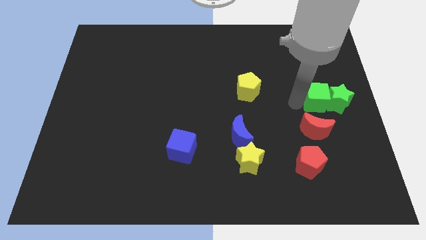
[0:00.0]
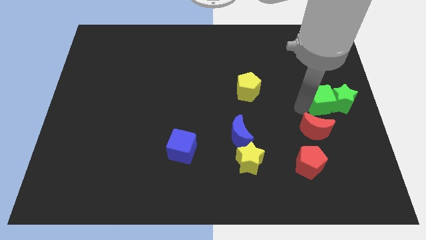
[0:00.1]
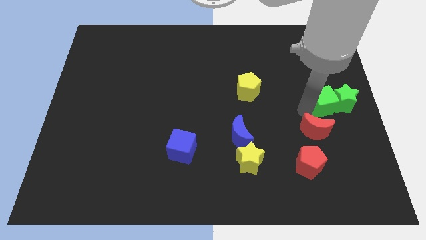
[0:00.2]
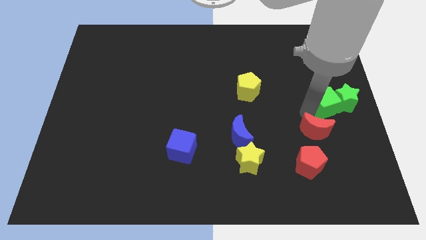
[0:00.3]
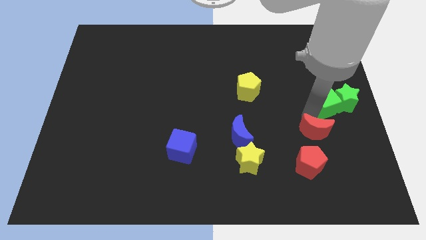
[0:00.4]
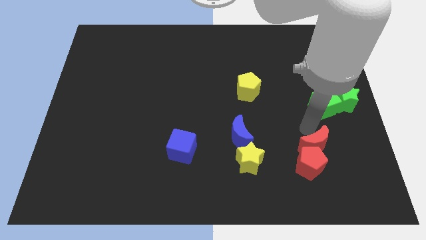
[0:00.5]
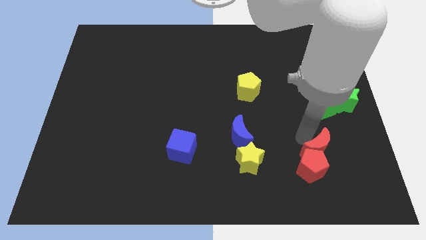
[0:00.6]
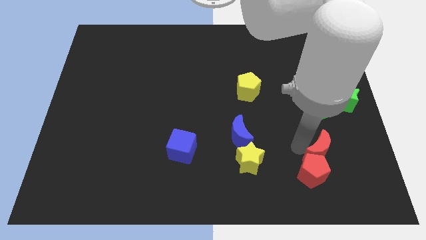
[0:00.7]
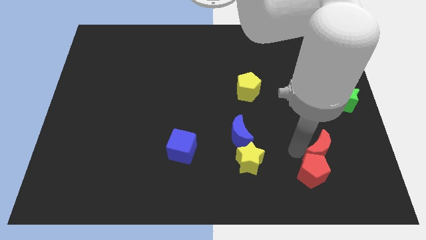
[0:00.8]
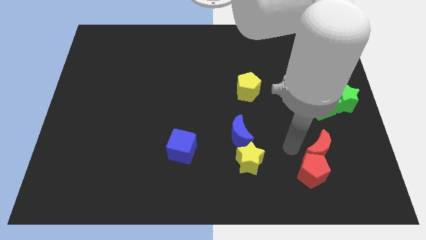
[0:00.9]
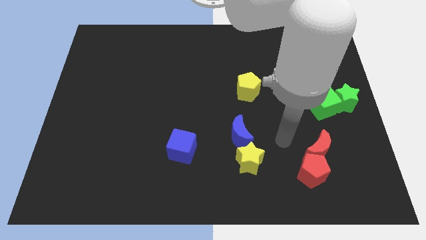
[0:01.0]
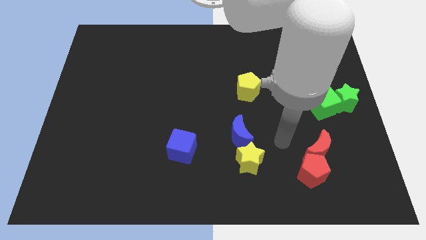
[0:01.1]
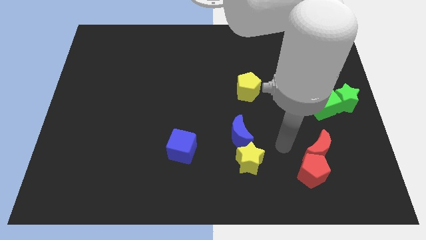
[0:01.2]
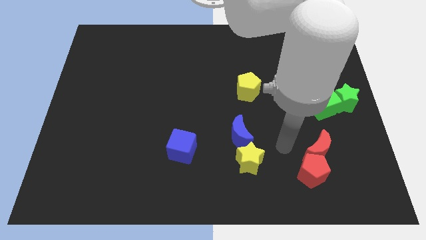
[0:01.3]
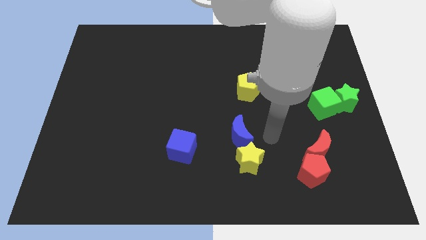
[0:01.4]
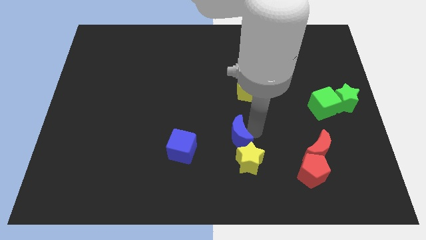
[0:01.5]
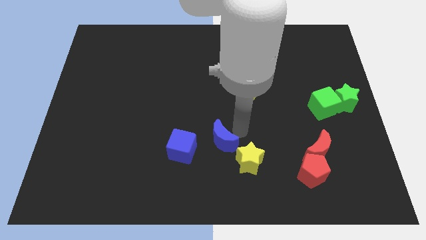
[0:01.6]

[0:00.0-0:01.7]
slide the blue moon towards the blue cube

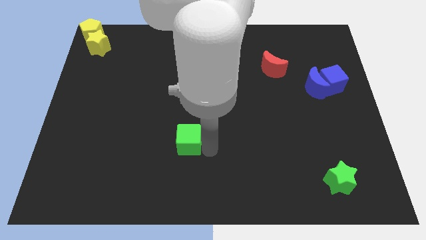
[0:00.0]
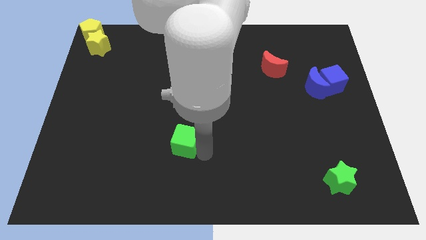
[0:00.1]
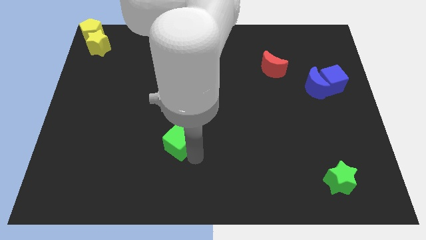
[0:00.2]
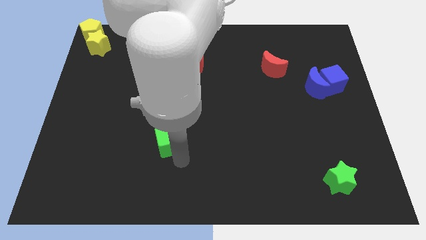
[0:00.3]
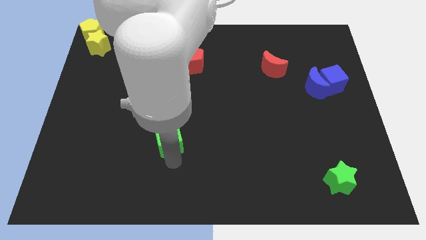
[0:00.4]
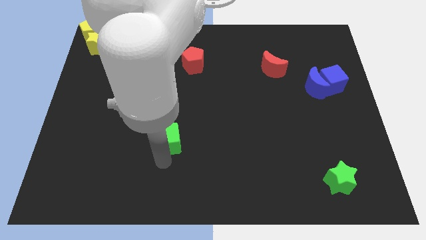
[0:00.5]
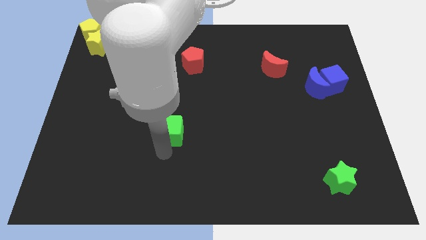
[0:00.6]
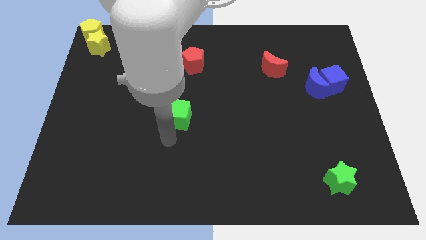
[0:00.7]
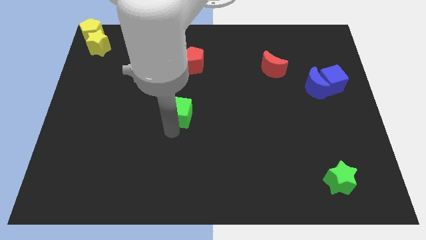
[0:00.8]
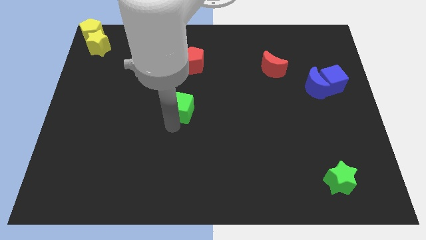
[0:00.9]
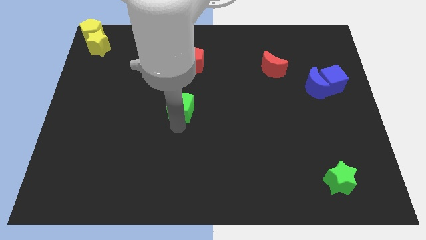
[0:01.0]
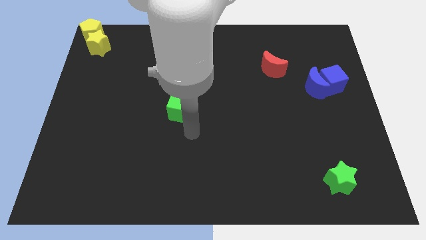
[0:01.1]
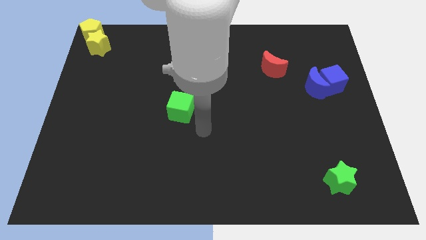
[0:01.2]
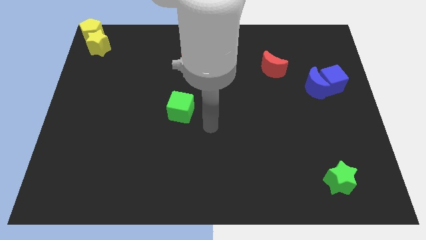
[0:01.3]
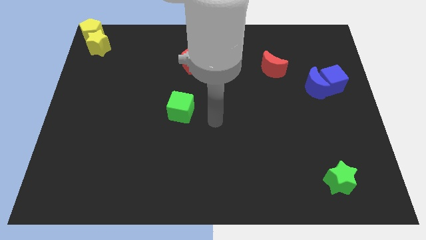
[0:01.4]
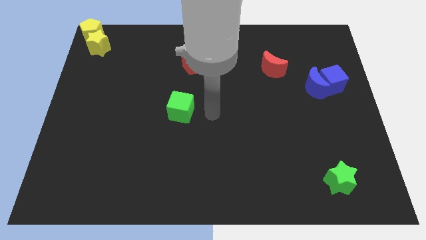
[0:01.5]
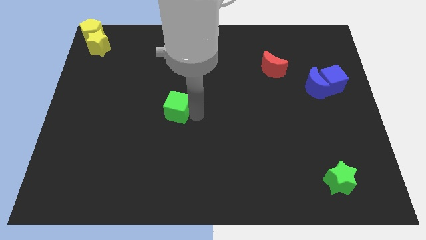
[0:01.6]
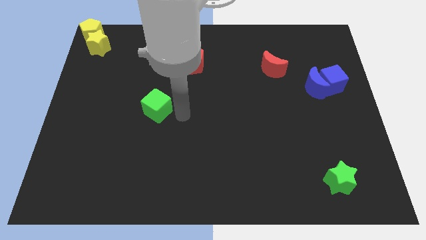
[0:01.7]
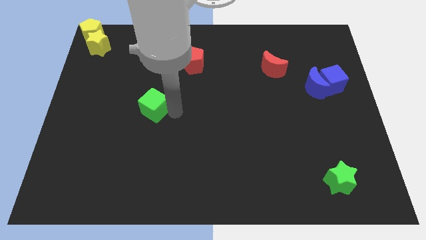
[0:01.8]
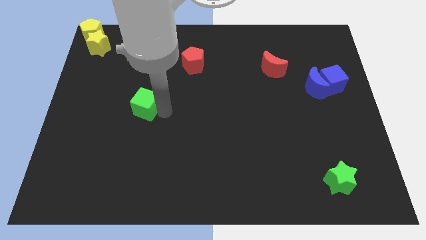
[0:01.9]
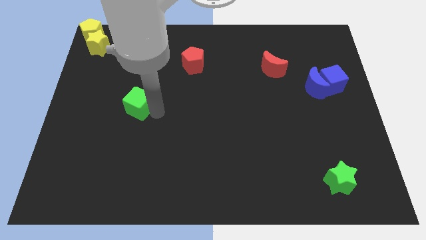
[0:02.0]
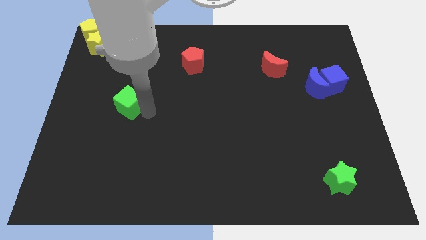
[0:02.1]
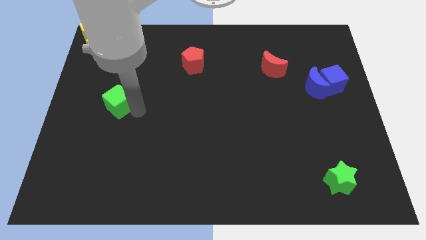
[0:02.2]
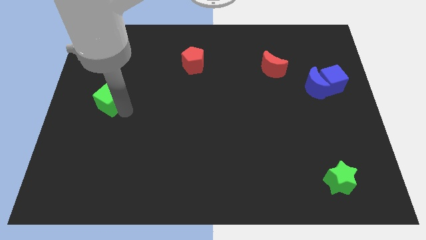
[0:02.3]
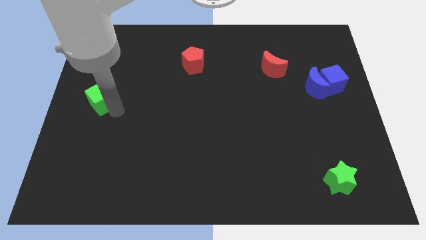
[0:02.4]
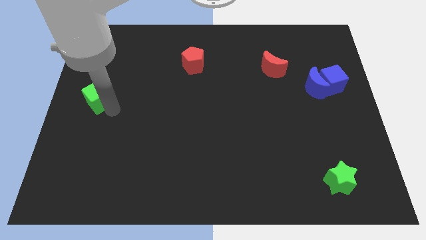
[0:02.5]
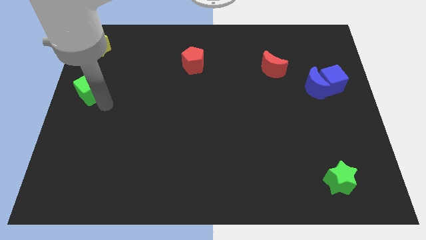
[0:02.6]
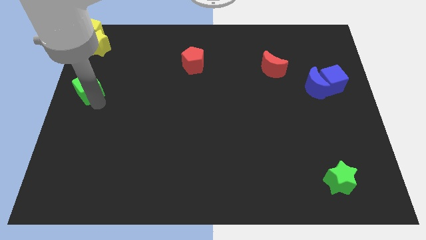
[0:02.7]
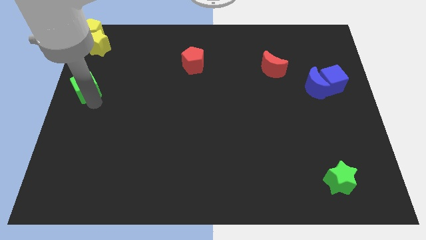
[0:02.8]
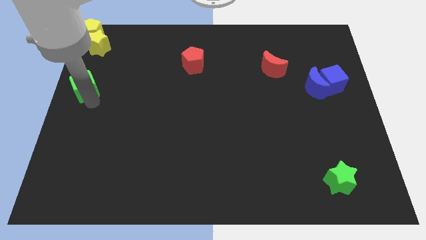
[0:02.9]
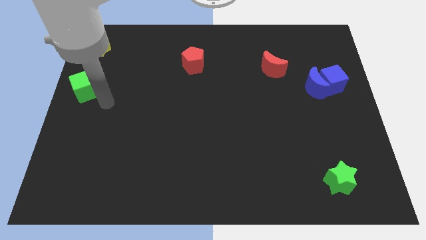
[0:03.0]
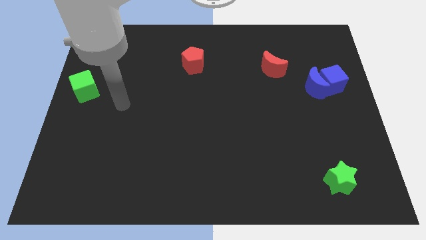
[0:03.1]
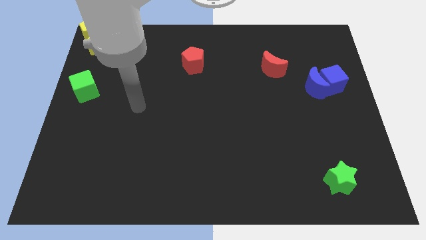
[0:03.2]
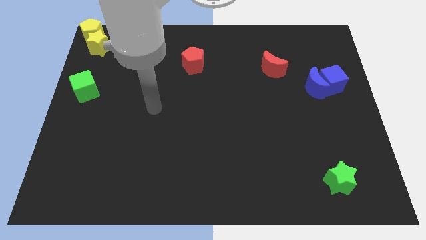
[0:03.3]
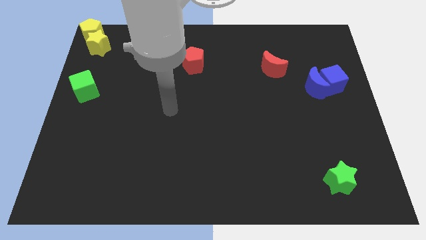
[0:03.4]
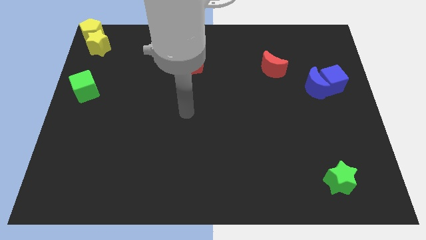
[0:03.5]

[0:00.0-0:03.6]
move the green cube to the bottom of the yellow star

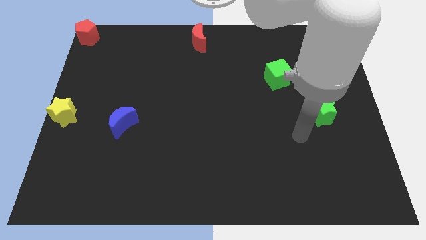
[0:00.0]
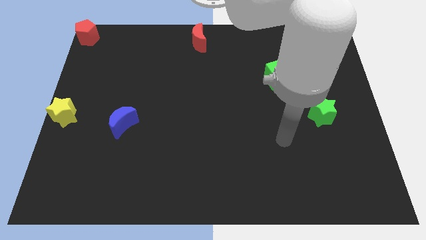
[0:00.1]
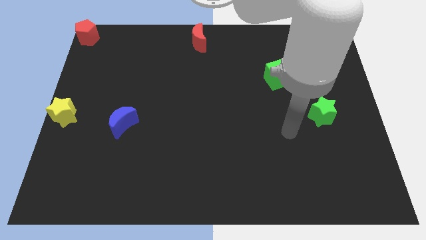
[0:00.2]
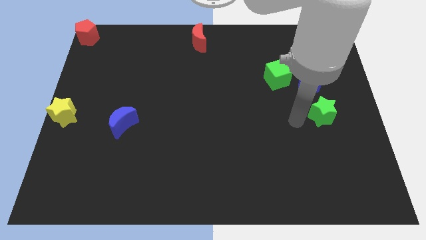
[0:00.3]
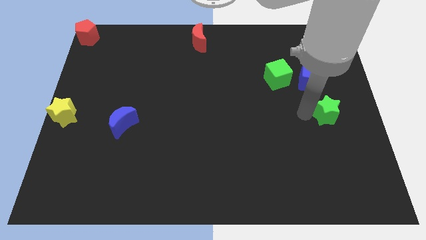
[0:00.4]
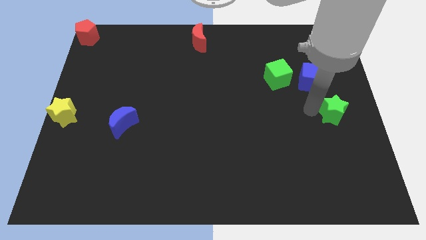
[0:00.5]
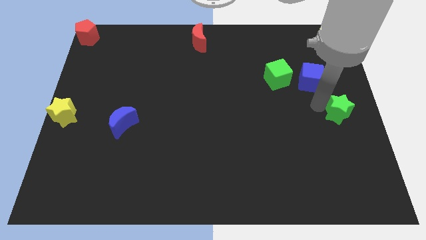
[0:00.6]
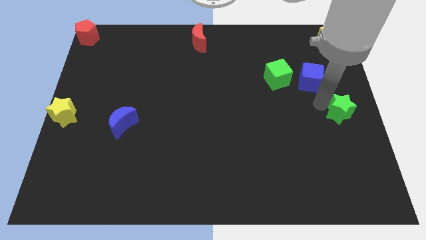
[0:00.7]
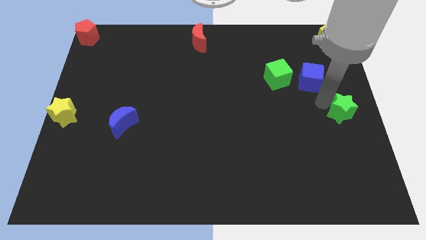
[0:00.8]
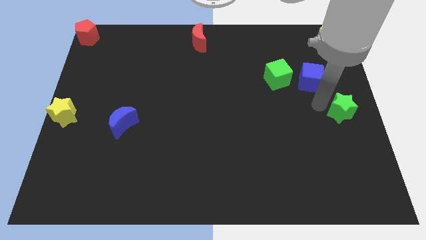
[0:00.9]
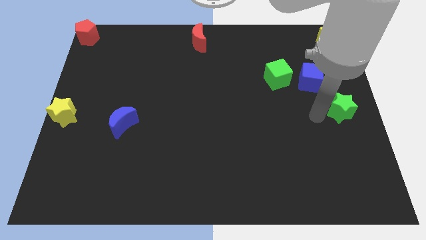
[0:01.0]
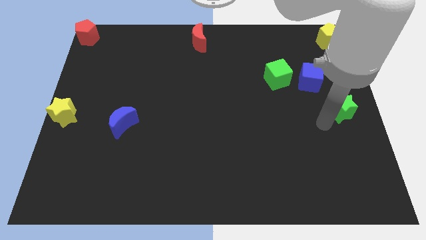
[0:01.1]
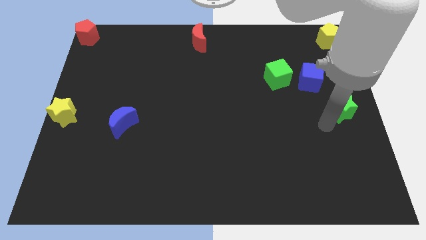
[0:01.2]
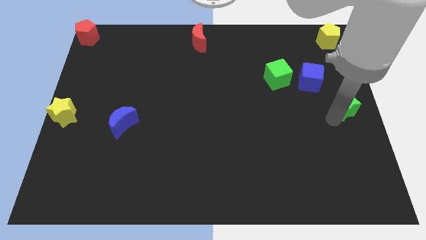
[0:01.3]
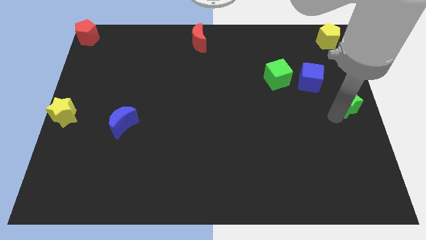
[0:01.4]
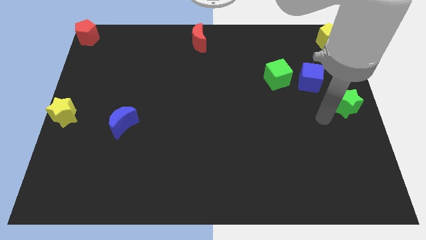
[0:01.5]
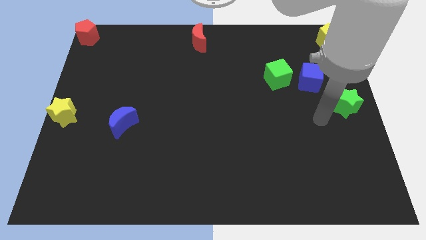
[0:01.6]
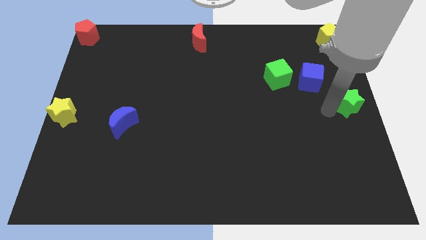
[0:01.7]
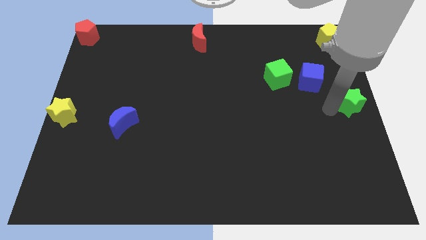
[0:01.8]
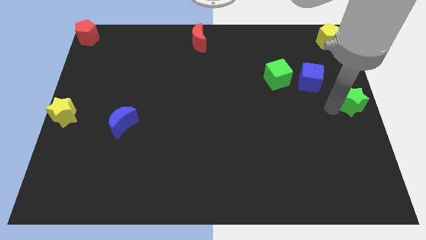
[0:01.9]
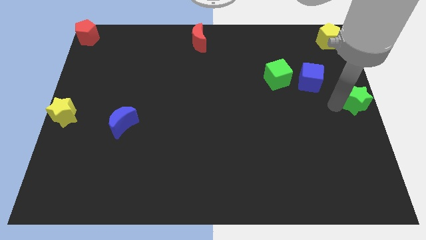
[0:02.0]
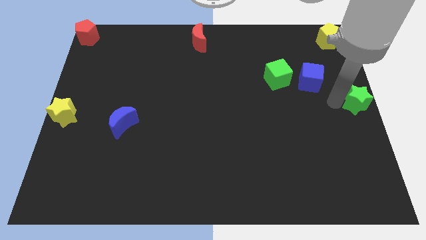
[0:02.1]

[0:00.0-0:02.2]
place the green star at the center right of the board

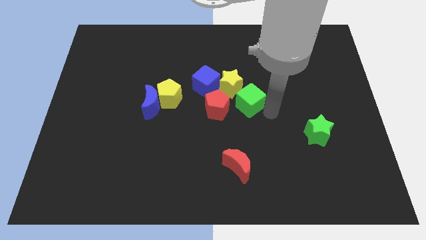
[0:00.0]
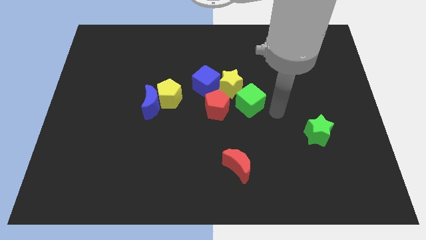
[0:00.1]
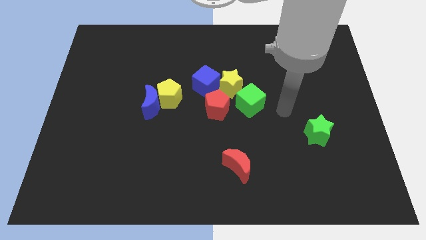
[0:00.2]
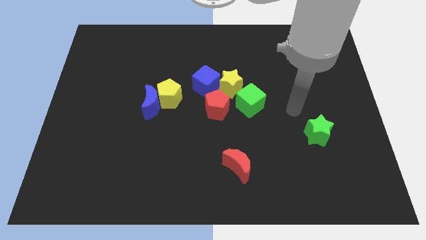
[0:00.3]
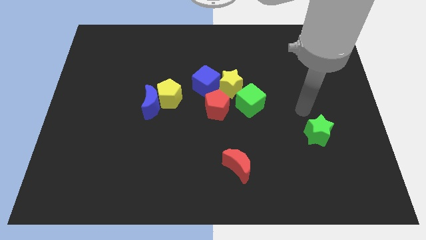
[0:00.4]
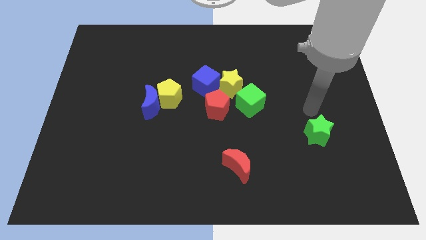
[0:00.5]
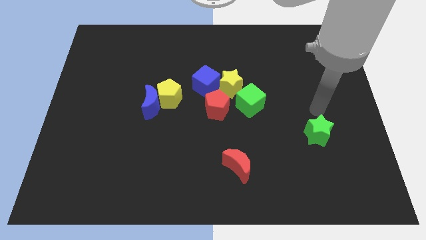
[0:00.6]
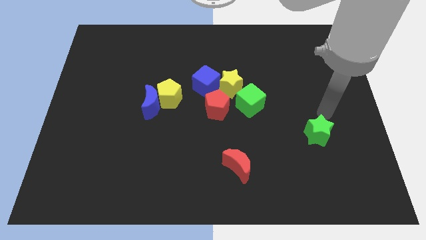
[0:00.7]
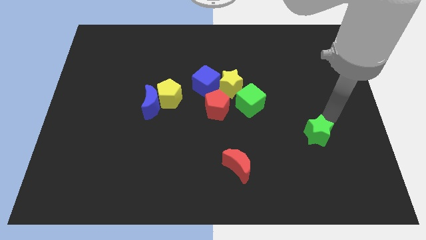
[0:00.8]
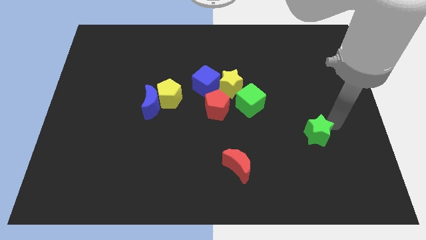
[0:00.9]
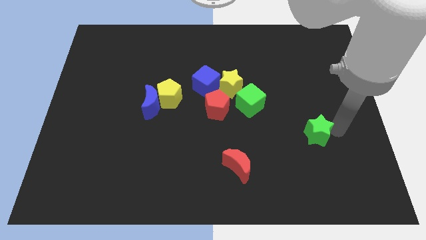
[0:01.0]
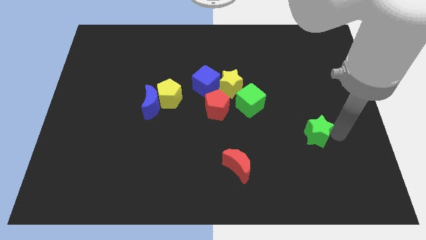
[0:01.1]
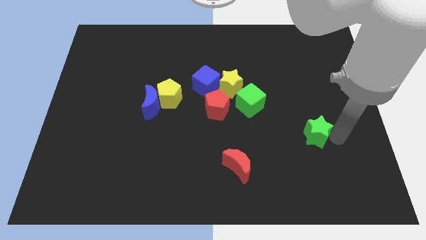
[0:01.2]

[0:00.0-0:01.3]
tab the right side of the green star

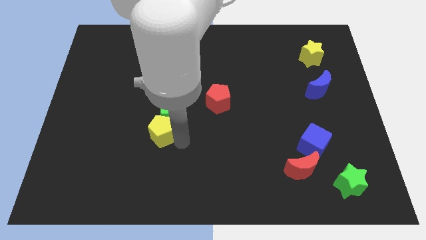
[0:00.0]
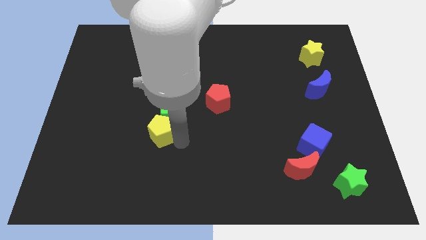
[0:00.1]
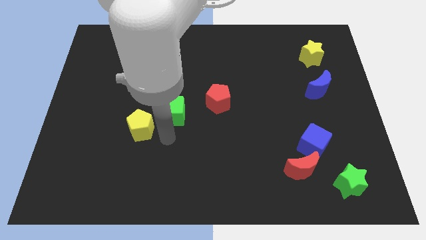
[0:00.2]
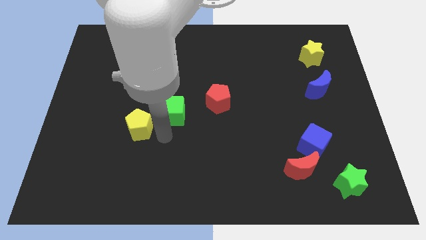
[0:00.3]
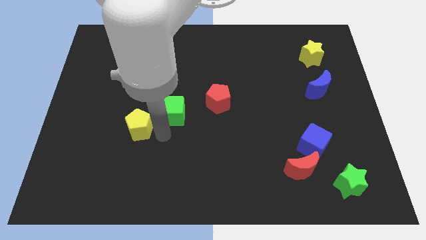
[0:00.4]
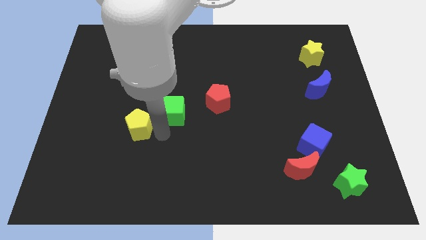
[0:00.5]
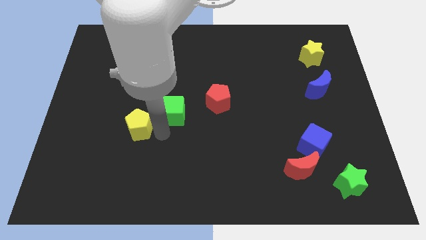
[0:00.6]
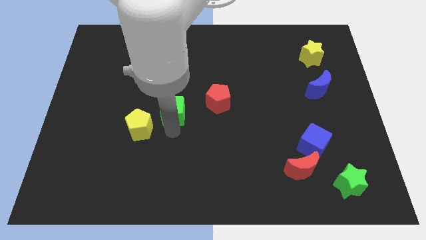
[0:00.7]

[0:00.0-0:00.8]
move the yellow pentagon slightly to the left
